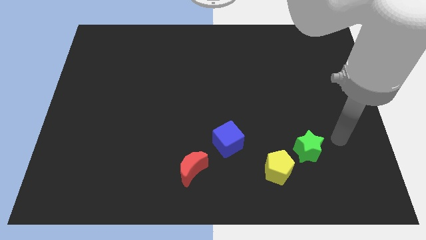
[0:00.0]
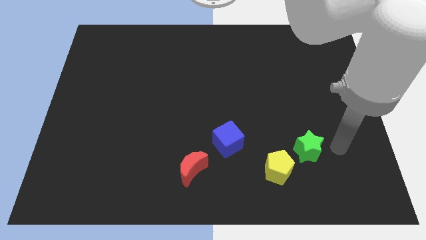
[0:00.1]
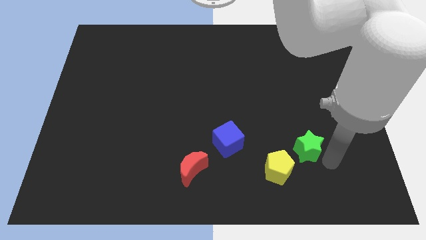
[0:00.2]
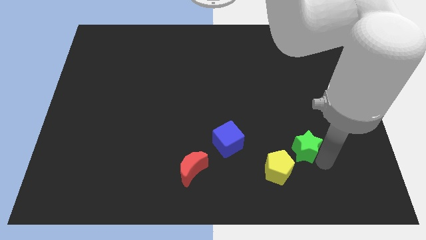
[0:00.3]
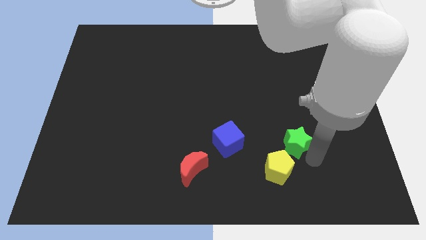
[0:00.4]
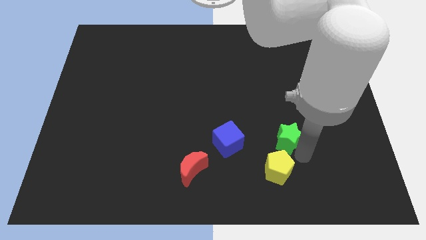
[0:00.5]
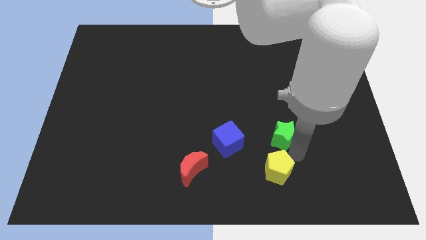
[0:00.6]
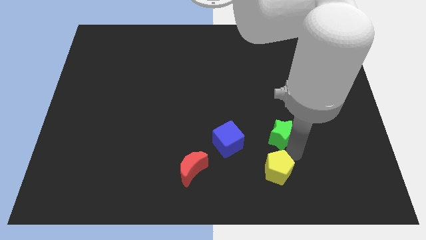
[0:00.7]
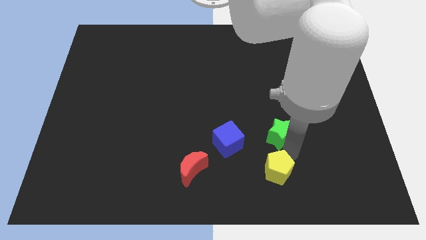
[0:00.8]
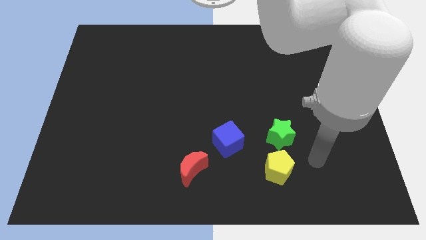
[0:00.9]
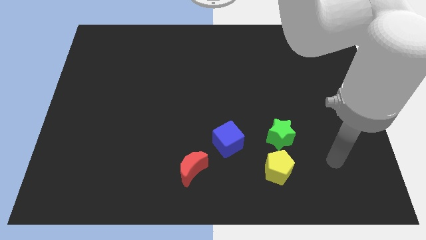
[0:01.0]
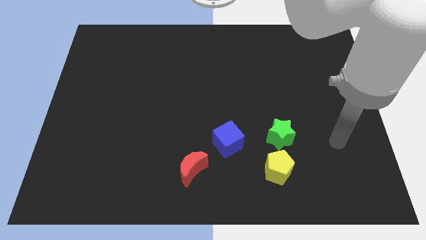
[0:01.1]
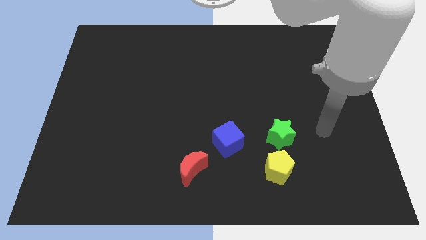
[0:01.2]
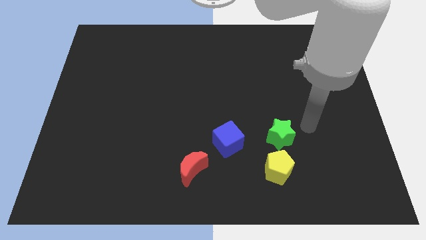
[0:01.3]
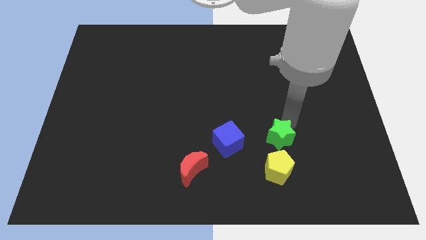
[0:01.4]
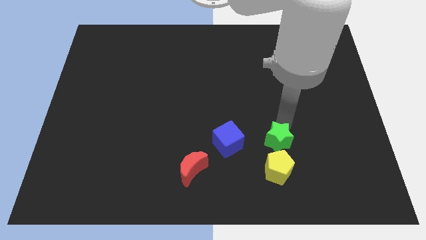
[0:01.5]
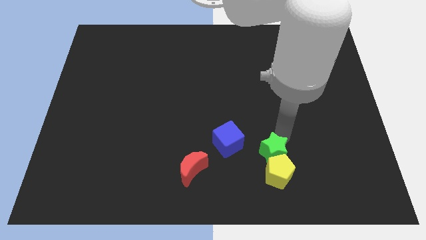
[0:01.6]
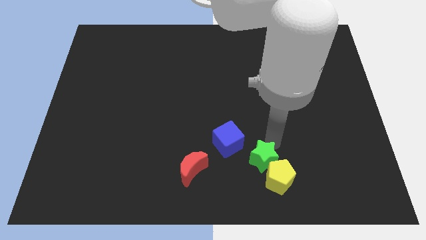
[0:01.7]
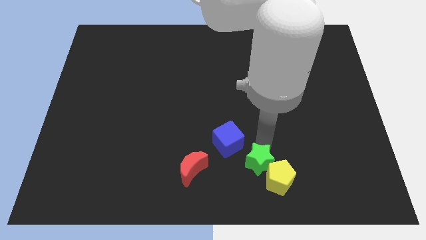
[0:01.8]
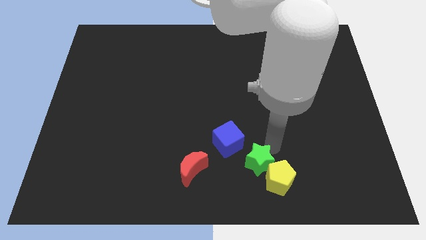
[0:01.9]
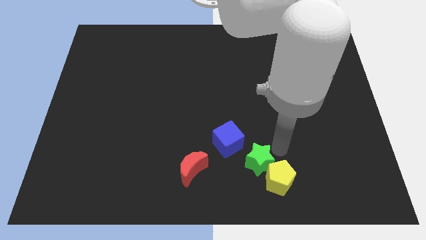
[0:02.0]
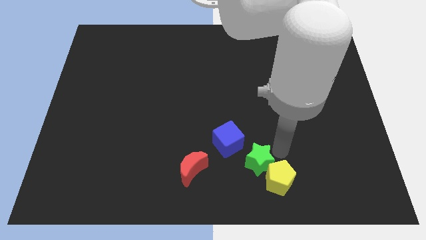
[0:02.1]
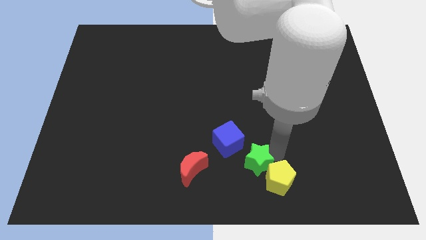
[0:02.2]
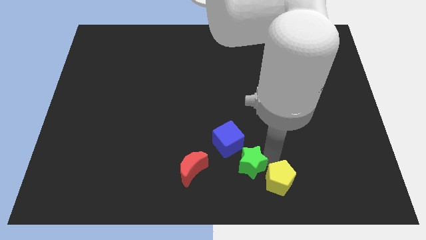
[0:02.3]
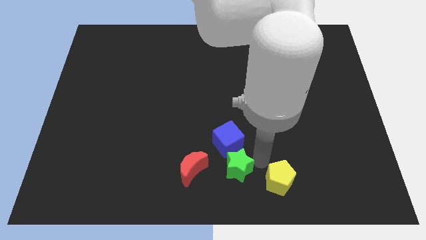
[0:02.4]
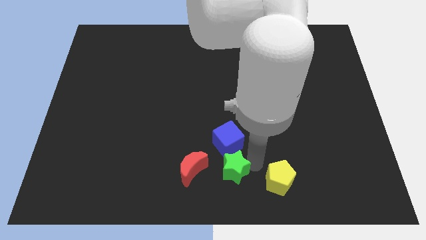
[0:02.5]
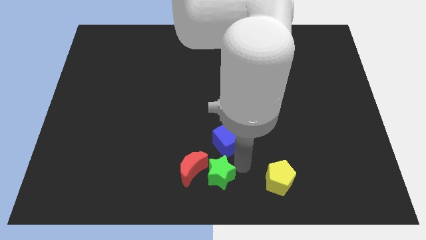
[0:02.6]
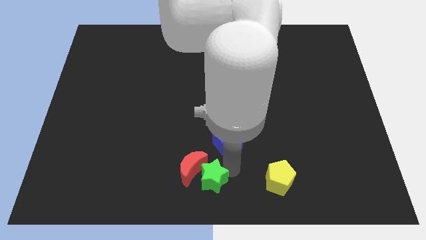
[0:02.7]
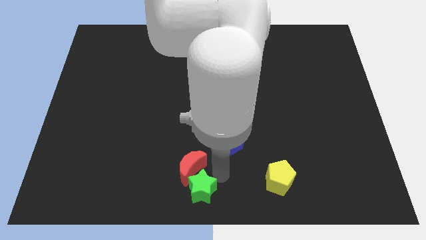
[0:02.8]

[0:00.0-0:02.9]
move the green star towards the red moon

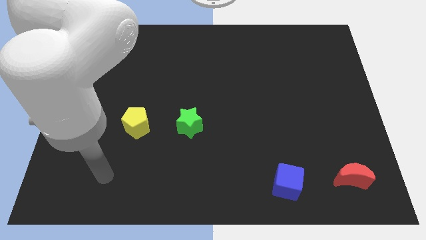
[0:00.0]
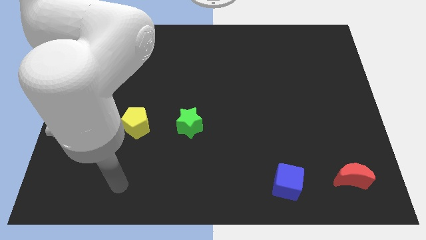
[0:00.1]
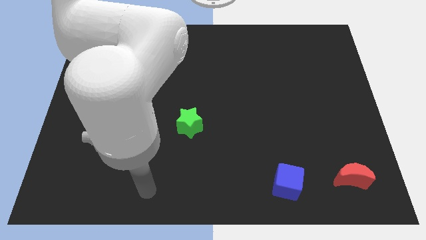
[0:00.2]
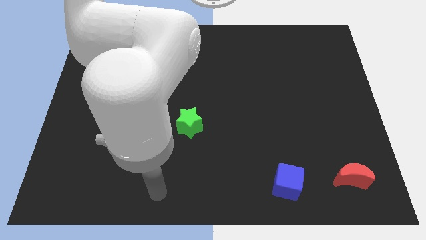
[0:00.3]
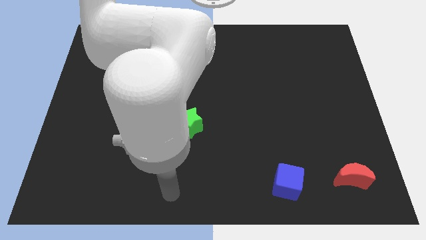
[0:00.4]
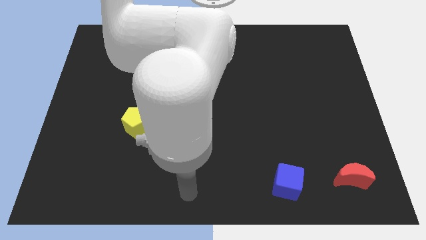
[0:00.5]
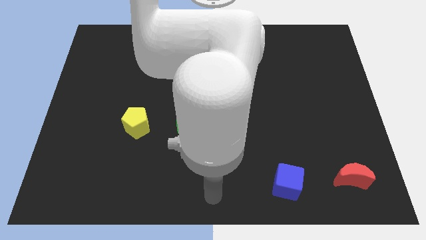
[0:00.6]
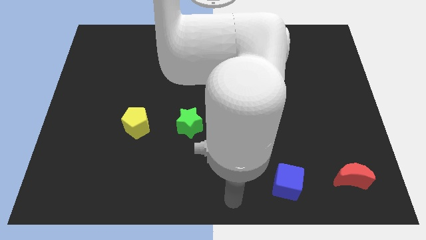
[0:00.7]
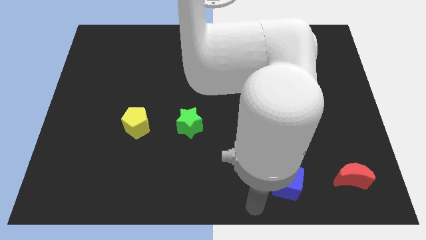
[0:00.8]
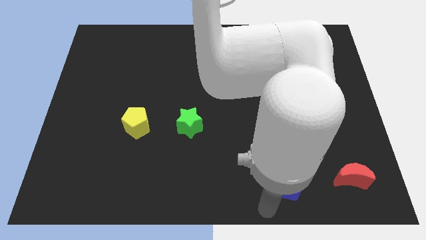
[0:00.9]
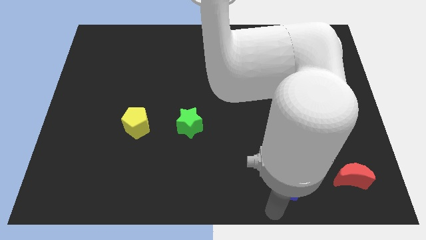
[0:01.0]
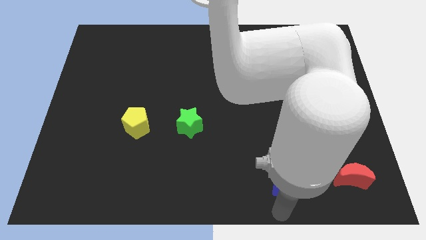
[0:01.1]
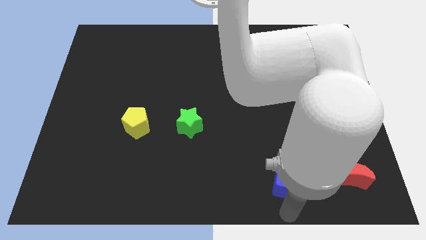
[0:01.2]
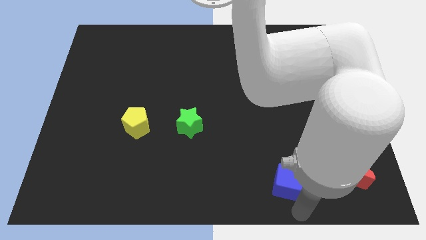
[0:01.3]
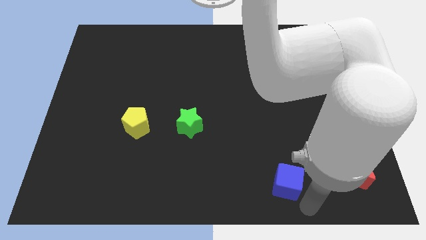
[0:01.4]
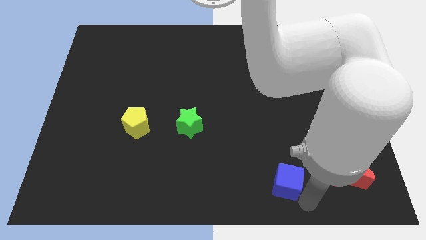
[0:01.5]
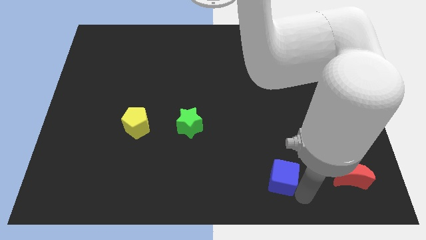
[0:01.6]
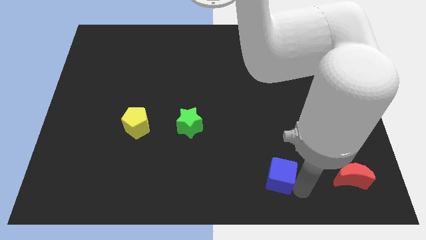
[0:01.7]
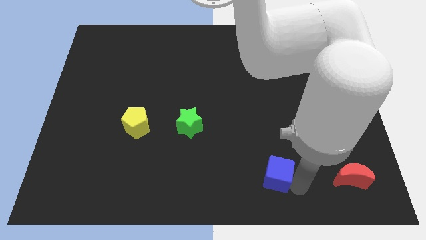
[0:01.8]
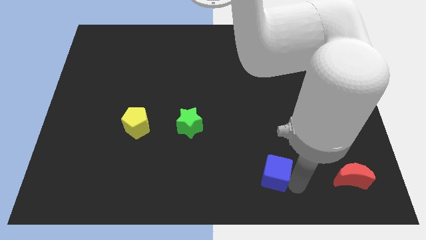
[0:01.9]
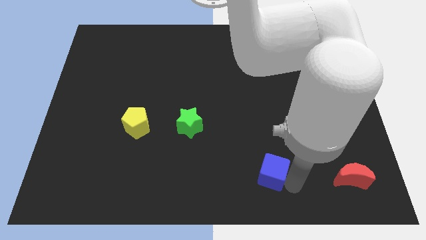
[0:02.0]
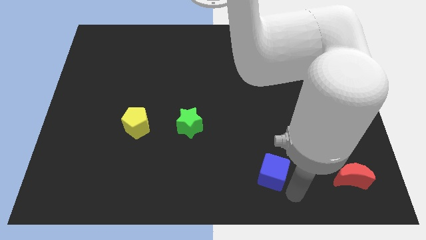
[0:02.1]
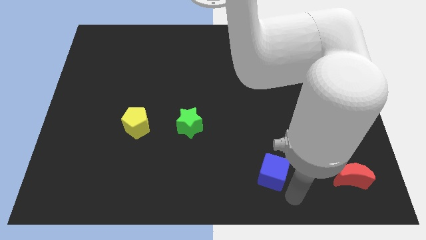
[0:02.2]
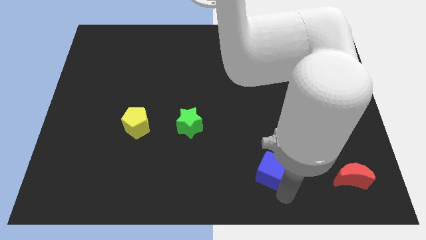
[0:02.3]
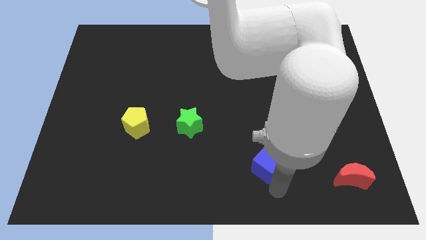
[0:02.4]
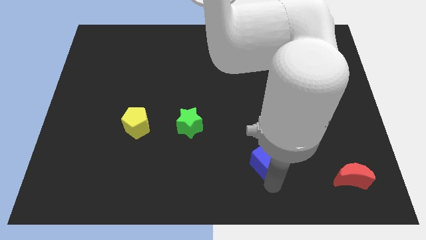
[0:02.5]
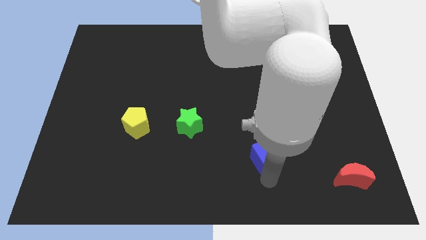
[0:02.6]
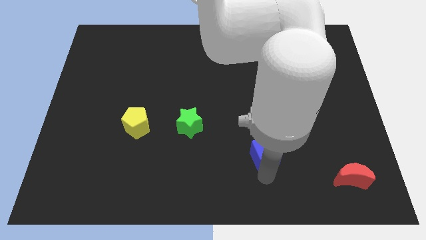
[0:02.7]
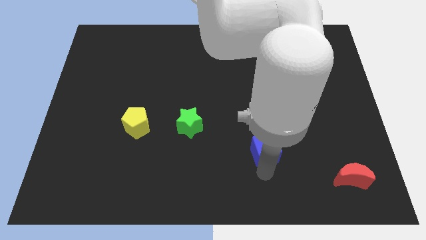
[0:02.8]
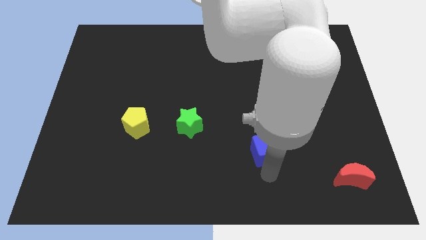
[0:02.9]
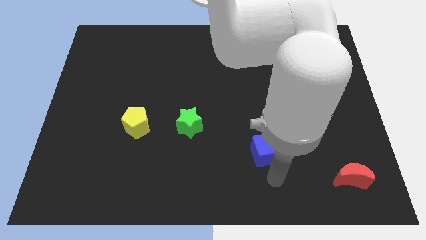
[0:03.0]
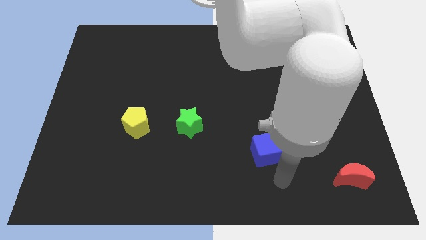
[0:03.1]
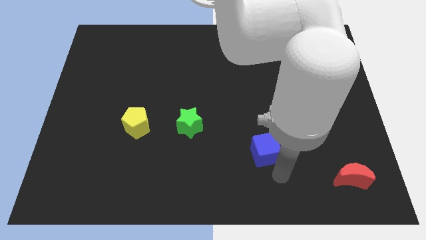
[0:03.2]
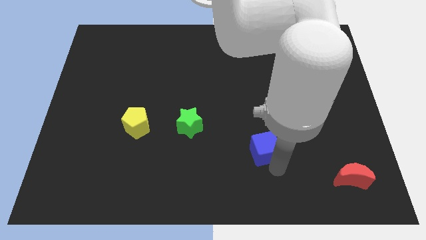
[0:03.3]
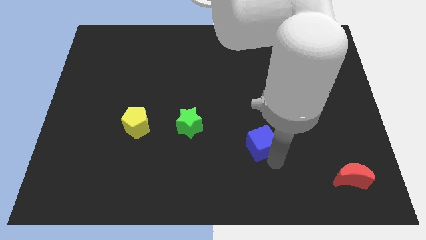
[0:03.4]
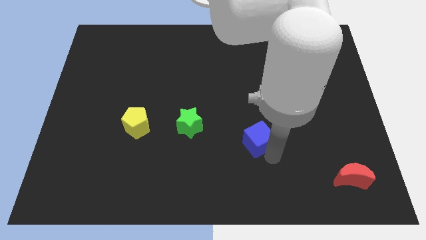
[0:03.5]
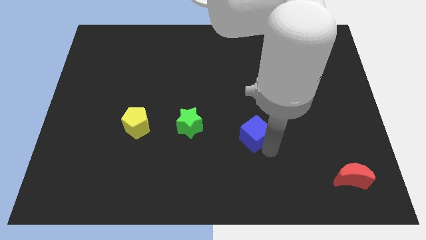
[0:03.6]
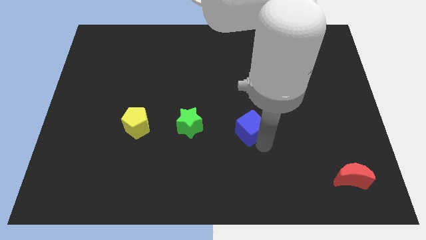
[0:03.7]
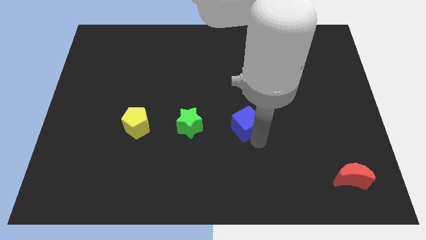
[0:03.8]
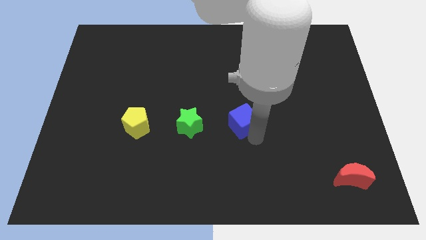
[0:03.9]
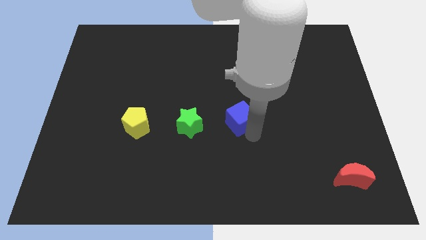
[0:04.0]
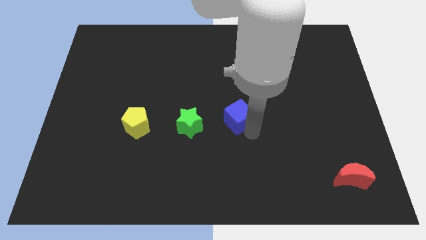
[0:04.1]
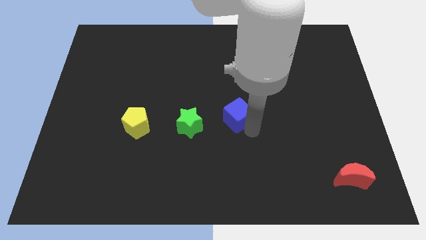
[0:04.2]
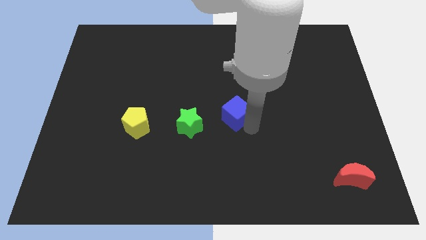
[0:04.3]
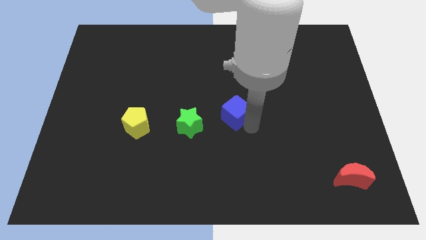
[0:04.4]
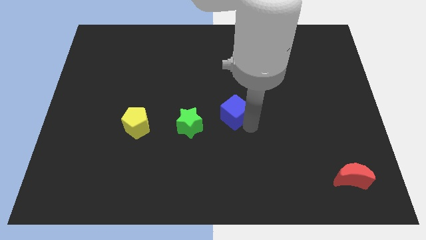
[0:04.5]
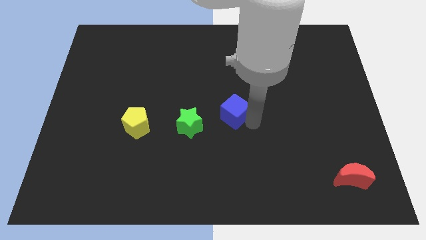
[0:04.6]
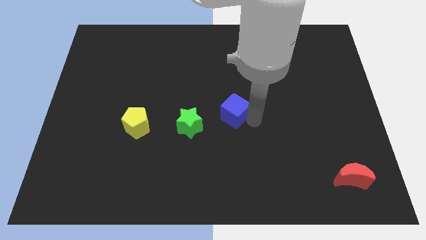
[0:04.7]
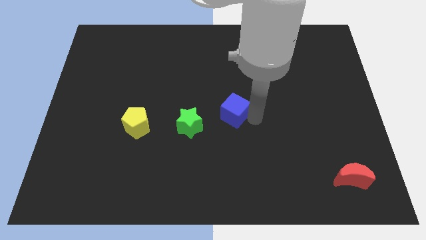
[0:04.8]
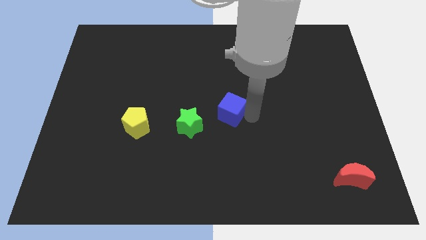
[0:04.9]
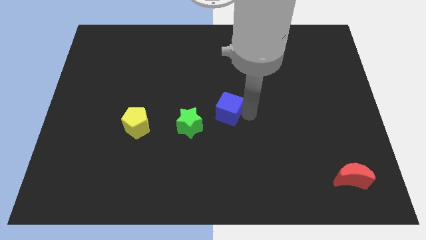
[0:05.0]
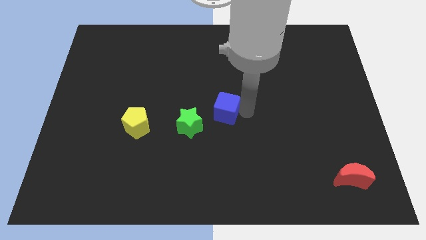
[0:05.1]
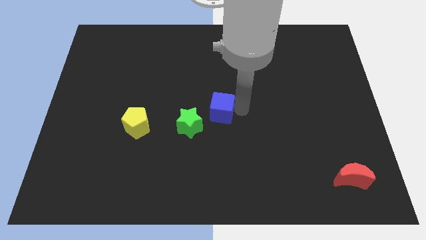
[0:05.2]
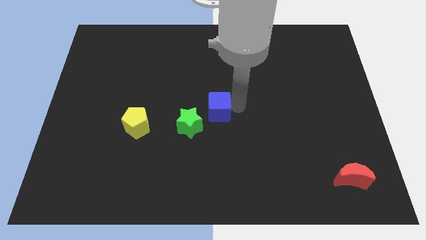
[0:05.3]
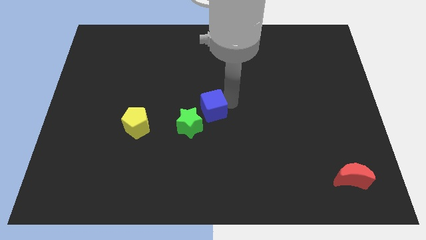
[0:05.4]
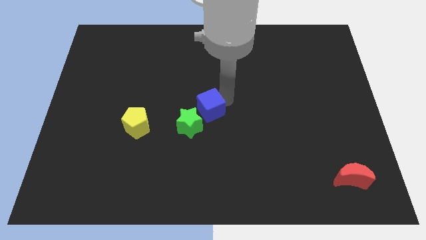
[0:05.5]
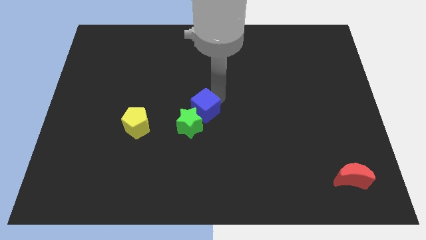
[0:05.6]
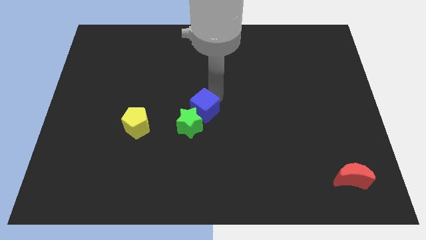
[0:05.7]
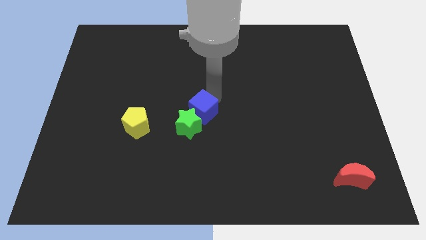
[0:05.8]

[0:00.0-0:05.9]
move the blue block next to the green block
